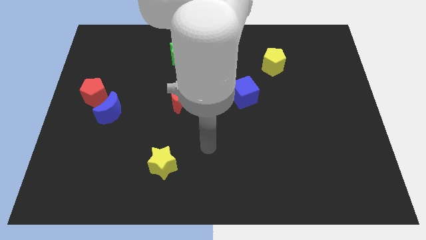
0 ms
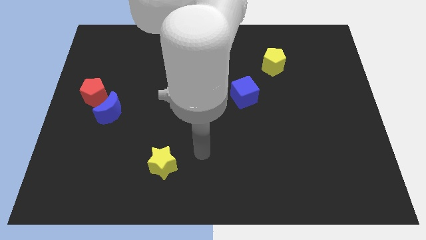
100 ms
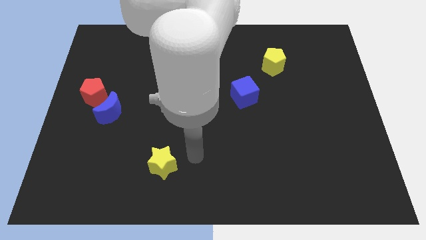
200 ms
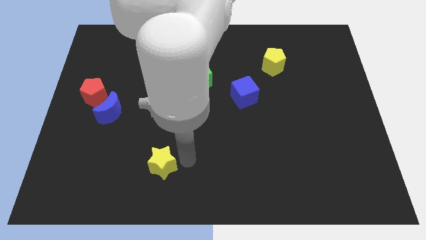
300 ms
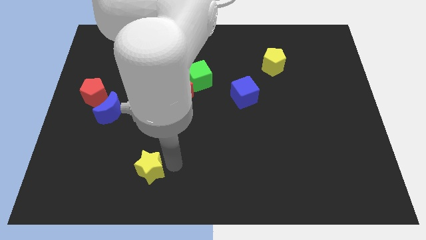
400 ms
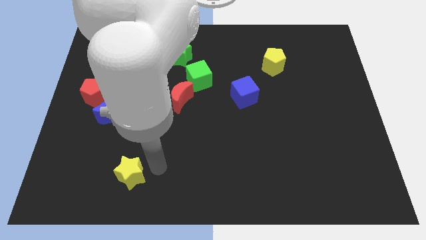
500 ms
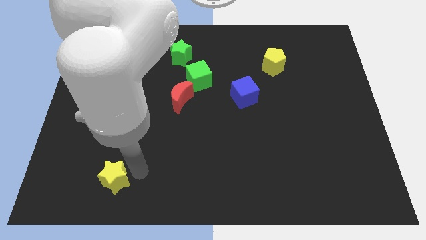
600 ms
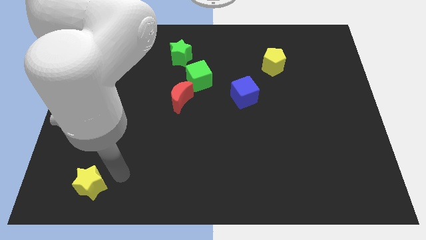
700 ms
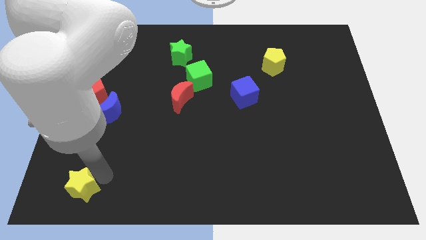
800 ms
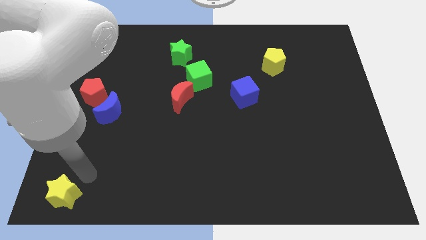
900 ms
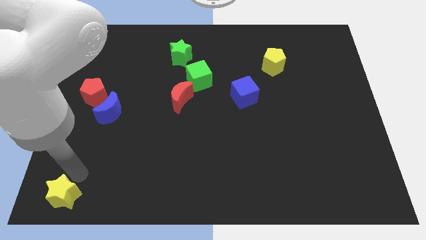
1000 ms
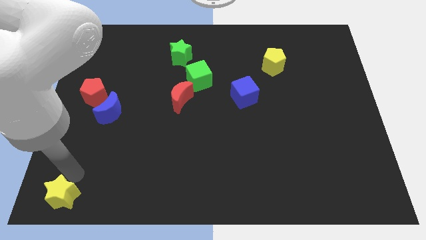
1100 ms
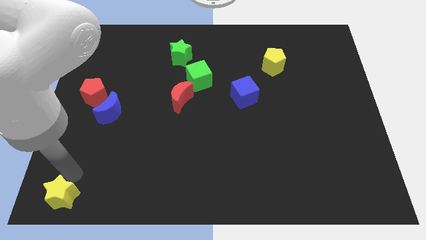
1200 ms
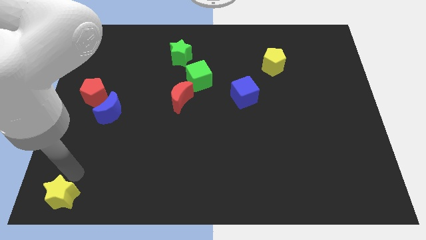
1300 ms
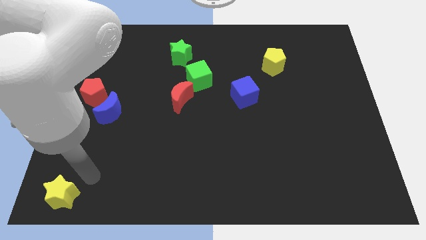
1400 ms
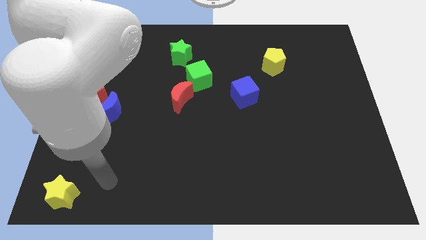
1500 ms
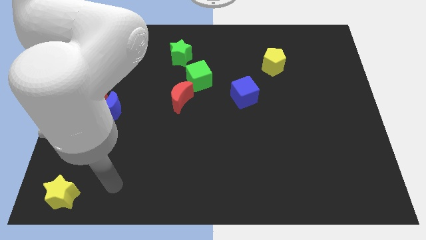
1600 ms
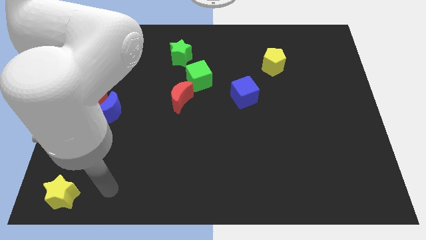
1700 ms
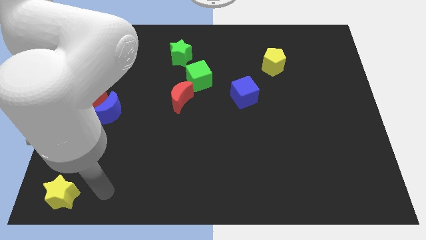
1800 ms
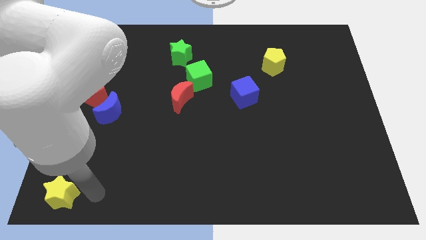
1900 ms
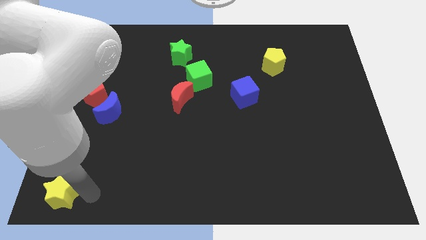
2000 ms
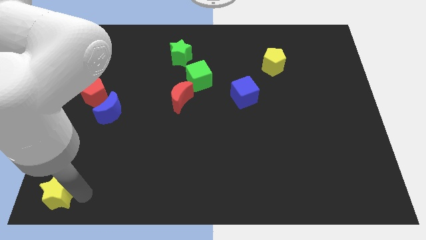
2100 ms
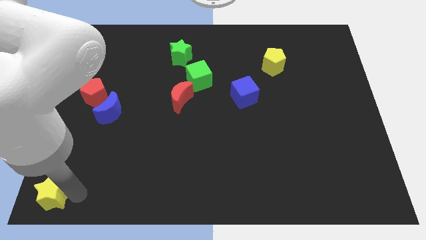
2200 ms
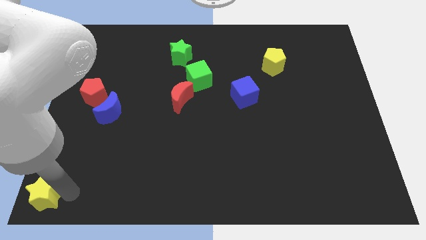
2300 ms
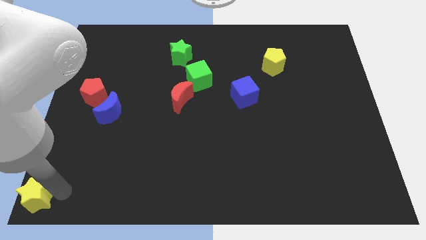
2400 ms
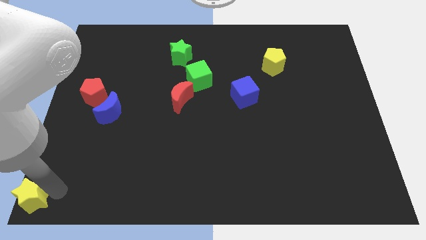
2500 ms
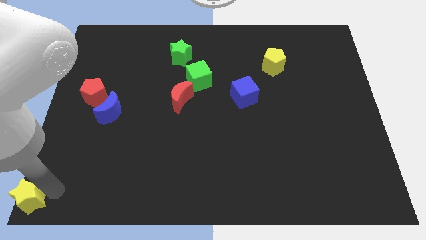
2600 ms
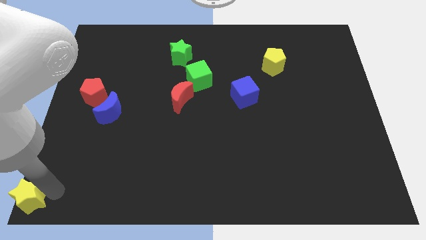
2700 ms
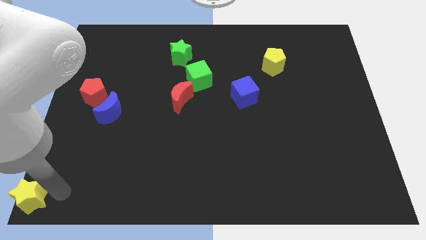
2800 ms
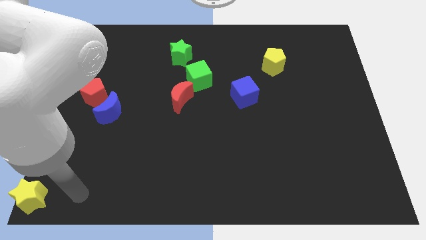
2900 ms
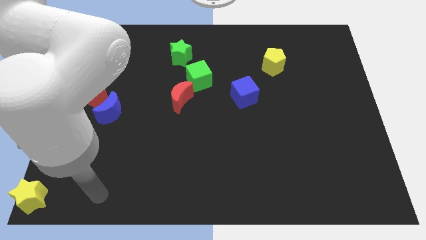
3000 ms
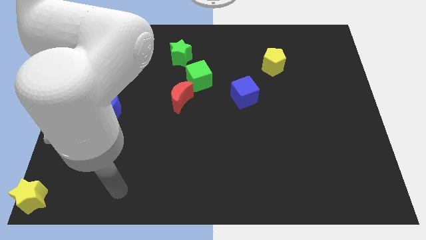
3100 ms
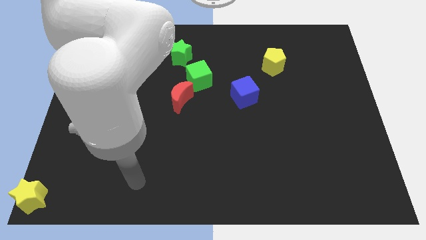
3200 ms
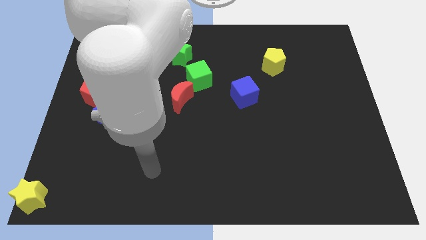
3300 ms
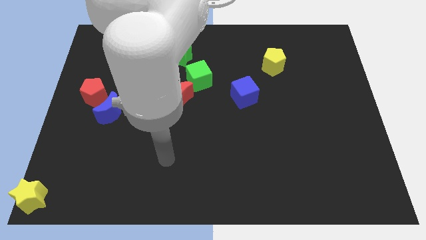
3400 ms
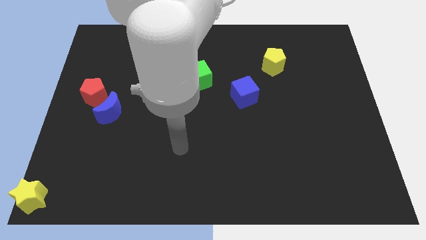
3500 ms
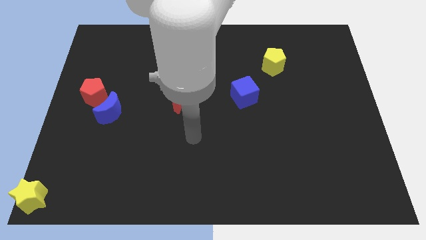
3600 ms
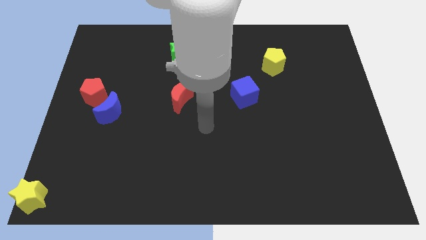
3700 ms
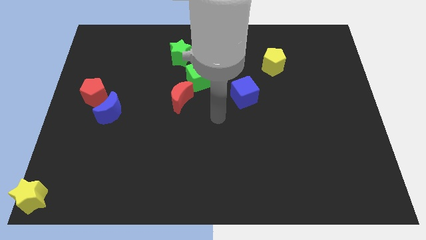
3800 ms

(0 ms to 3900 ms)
move the yellow star to bottom left corner of the board

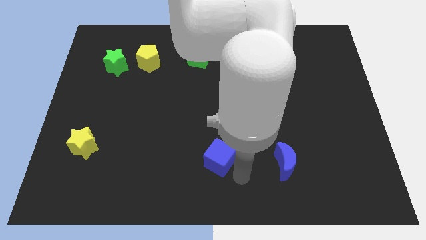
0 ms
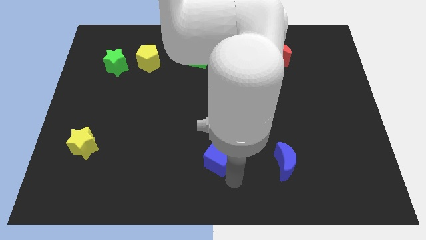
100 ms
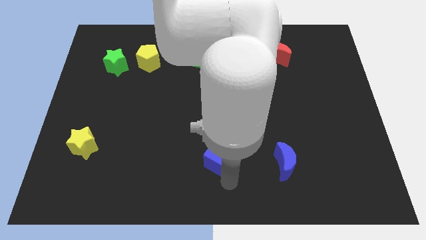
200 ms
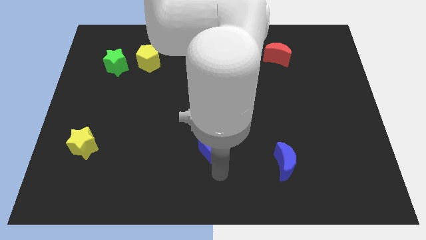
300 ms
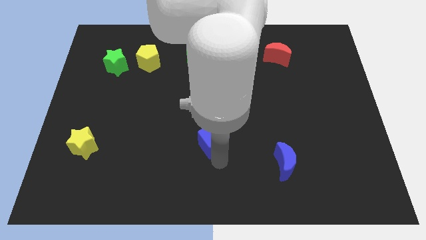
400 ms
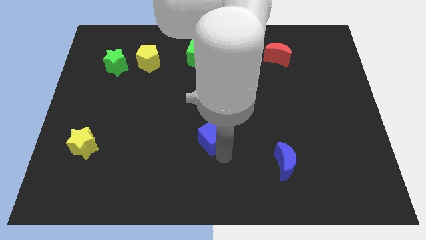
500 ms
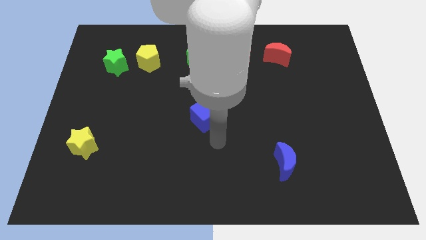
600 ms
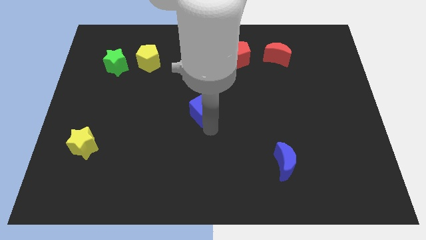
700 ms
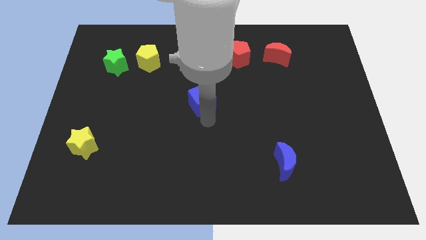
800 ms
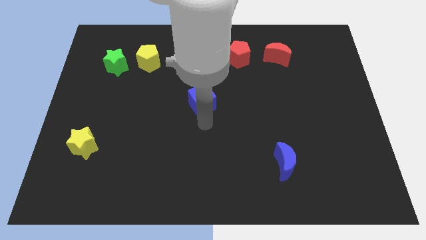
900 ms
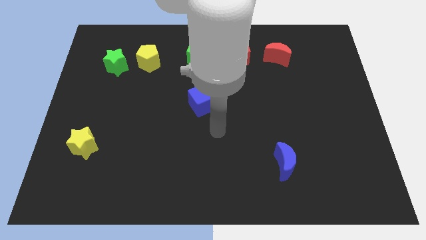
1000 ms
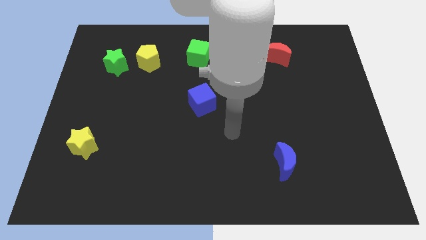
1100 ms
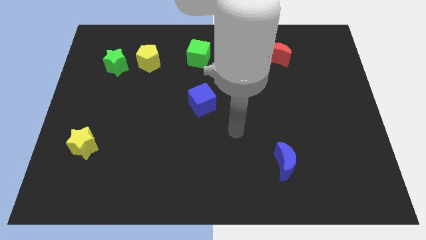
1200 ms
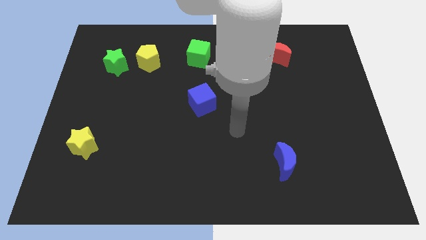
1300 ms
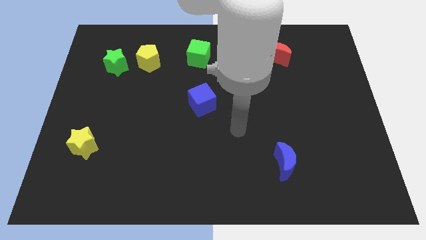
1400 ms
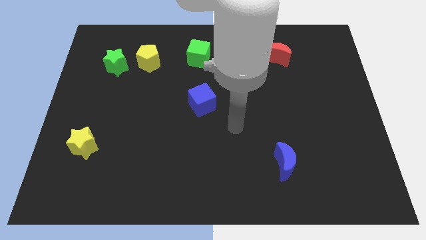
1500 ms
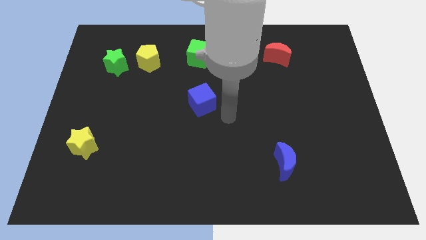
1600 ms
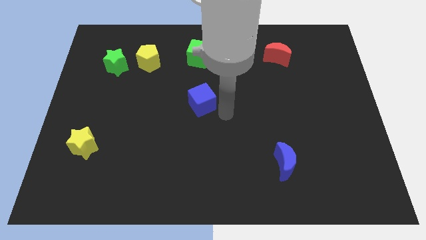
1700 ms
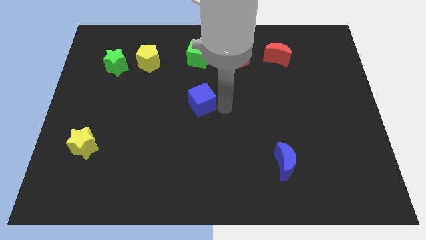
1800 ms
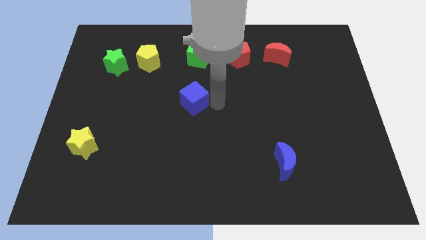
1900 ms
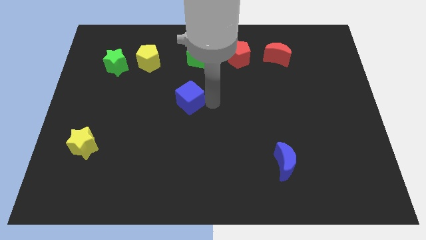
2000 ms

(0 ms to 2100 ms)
push the blue cube closer to the green cube

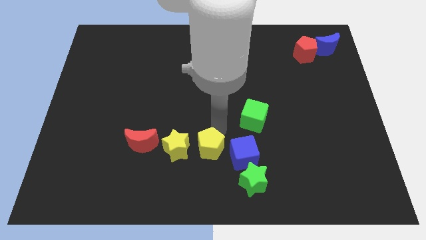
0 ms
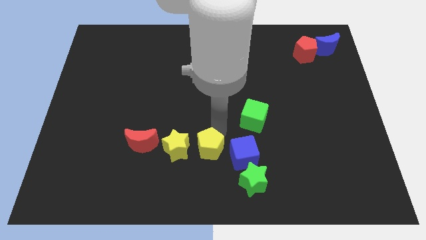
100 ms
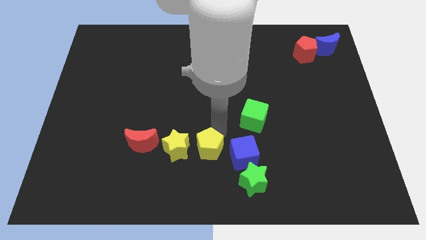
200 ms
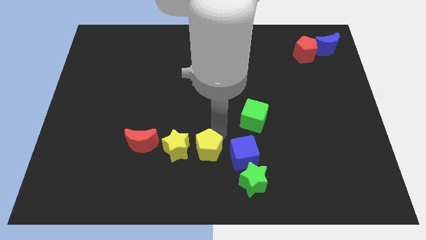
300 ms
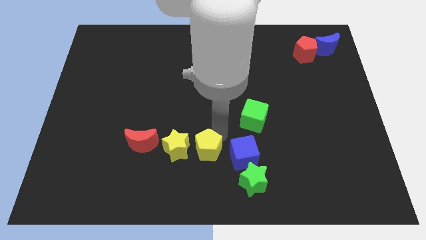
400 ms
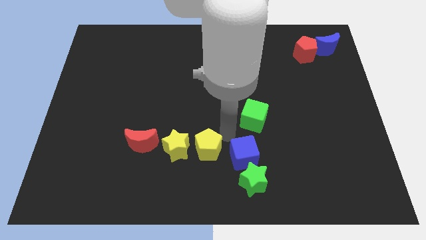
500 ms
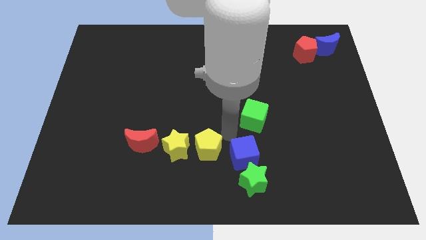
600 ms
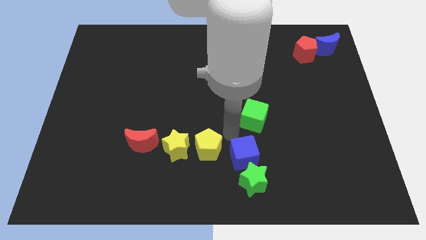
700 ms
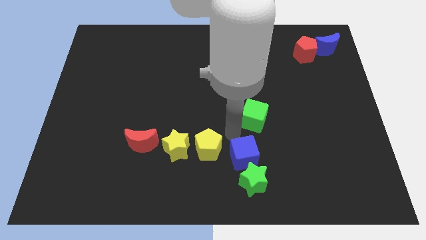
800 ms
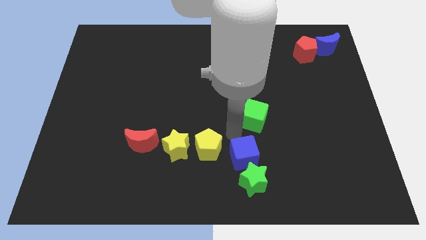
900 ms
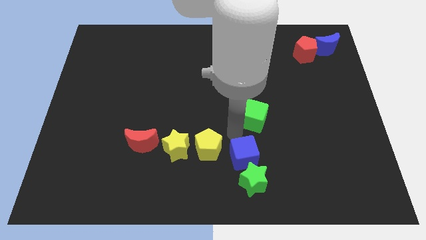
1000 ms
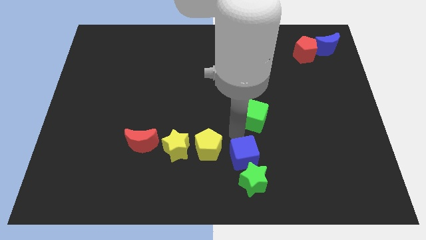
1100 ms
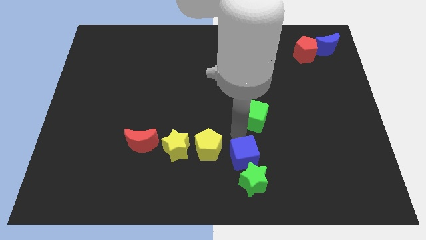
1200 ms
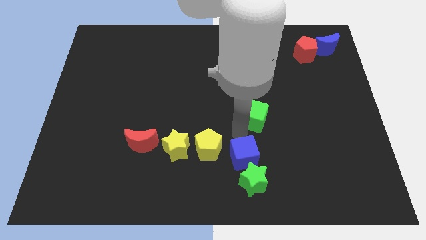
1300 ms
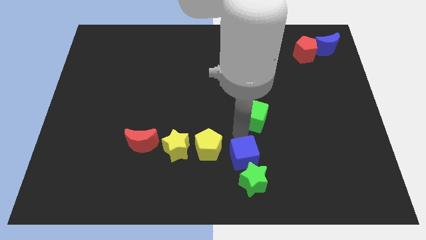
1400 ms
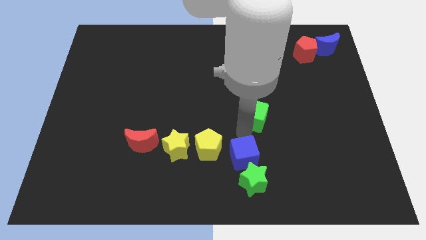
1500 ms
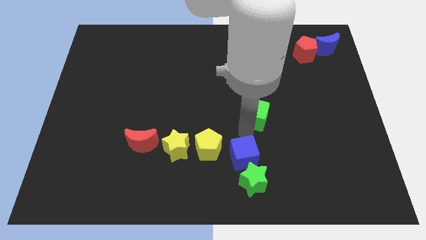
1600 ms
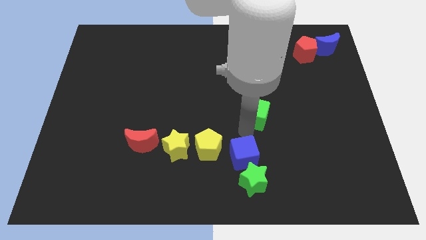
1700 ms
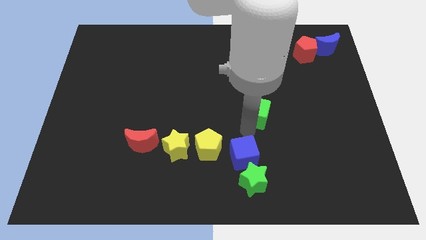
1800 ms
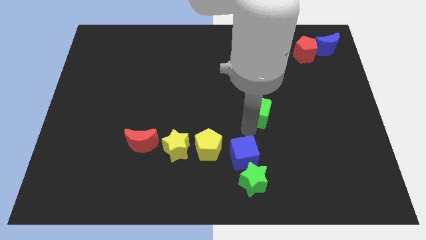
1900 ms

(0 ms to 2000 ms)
touch the bottom of green cube

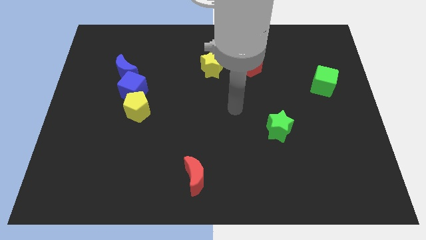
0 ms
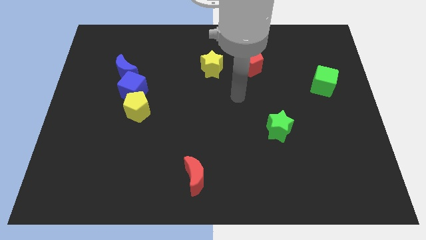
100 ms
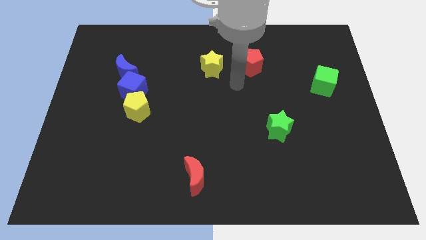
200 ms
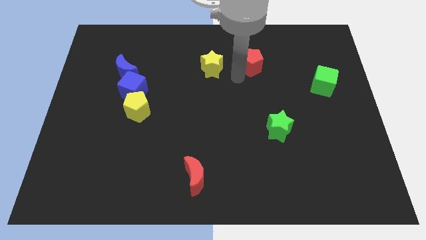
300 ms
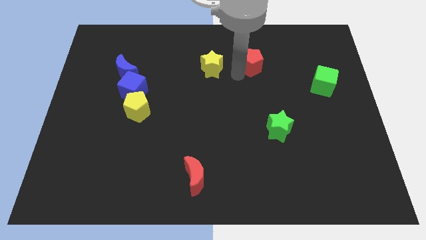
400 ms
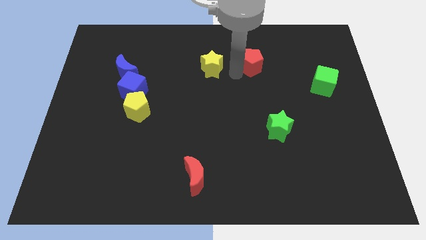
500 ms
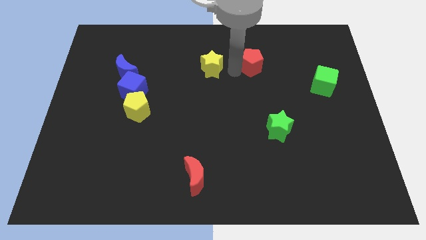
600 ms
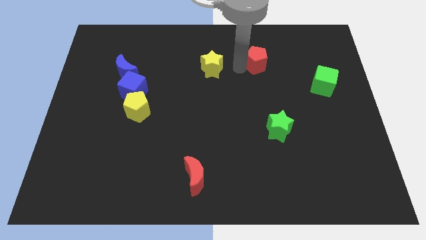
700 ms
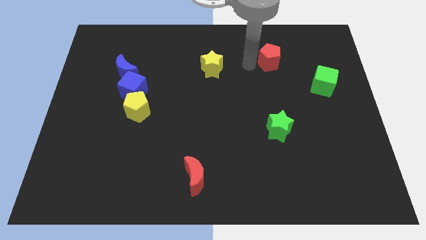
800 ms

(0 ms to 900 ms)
touch the red pentagon

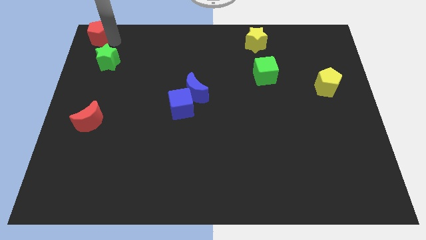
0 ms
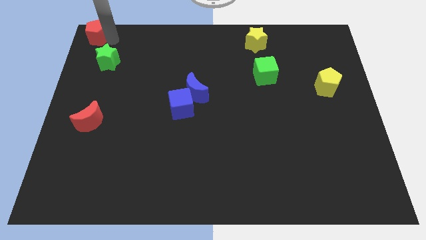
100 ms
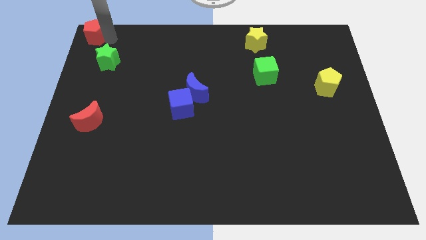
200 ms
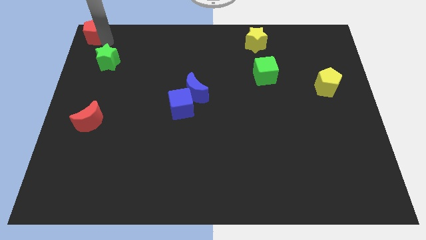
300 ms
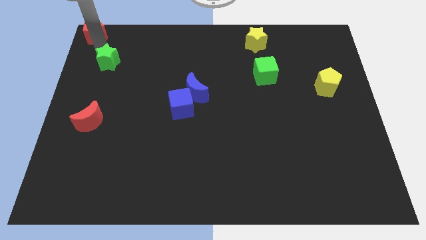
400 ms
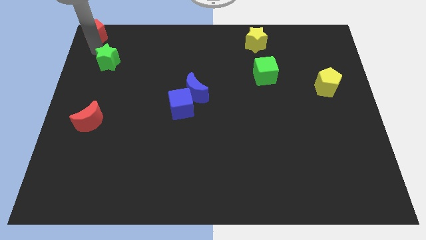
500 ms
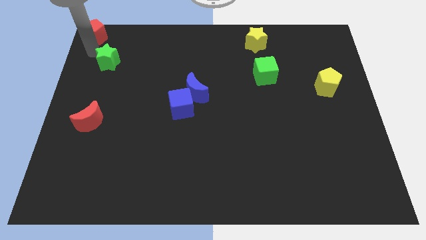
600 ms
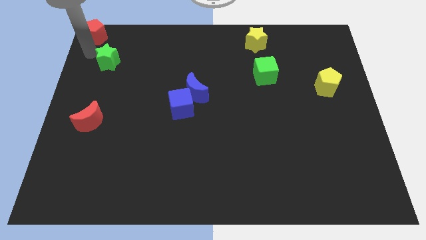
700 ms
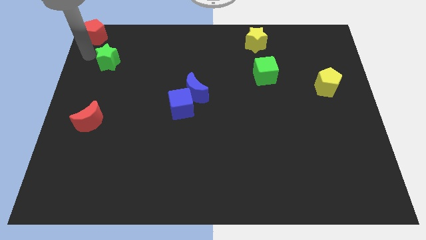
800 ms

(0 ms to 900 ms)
move red pentagon diagonally above green star
